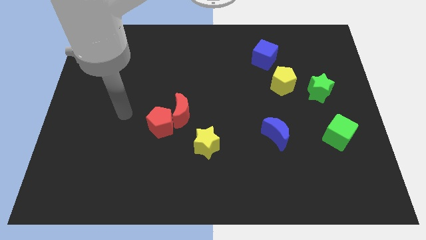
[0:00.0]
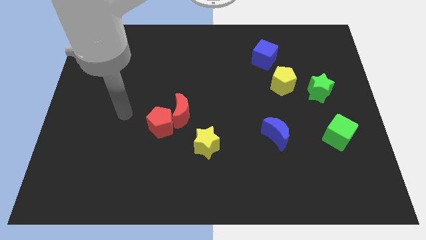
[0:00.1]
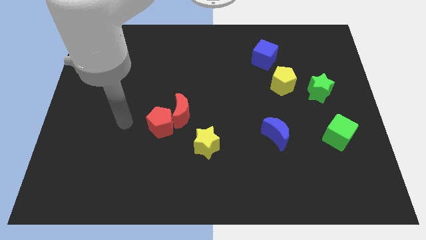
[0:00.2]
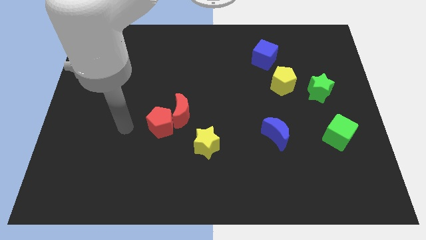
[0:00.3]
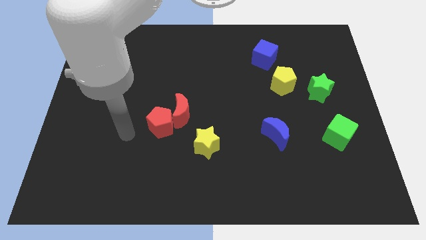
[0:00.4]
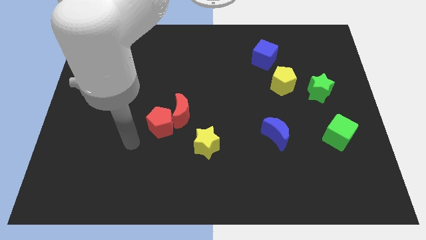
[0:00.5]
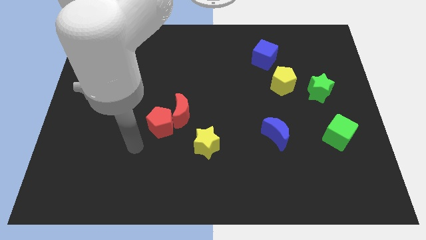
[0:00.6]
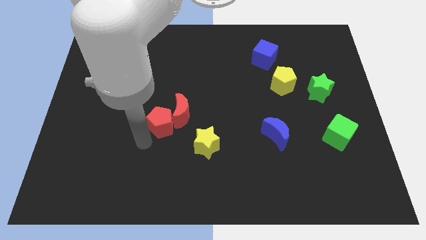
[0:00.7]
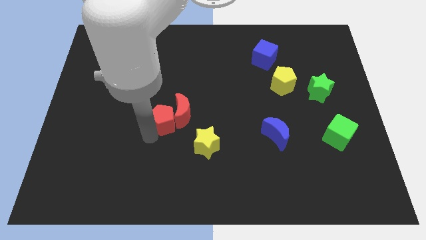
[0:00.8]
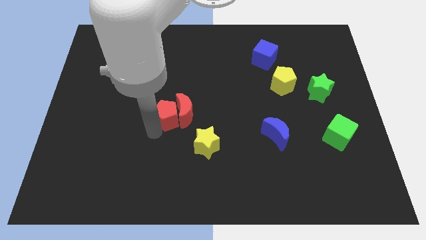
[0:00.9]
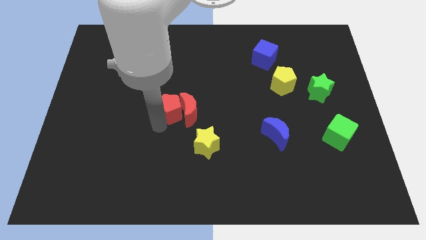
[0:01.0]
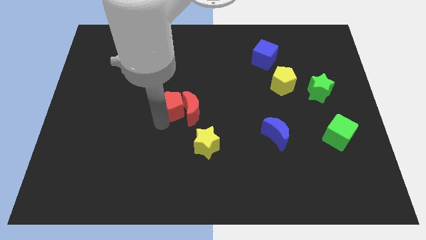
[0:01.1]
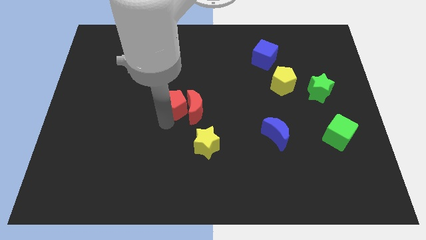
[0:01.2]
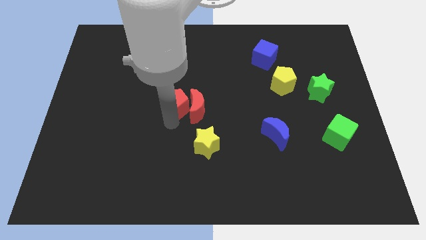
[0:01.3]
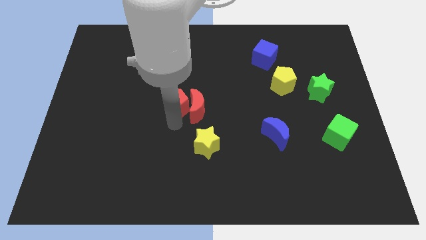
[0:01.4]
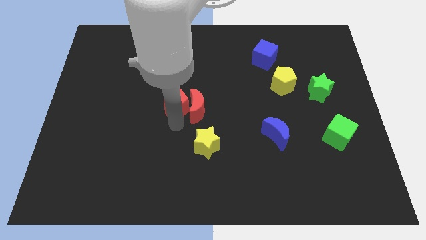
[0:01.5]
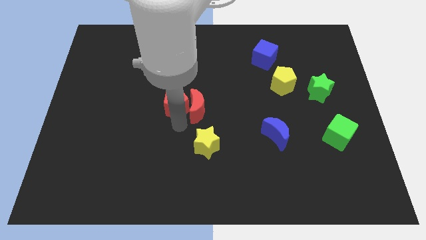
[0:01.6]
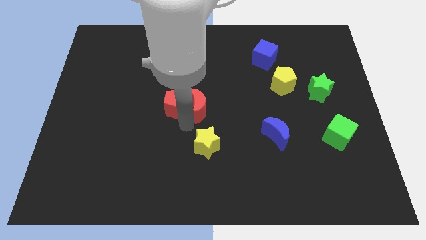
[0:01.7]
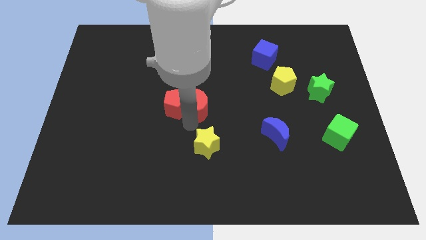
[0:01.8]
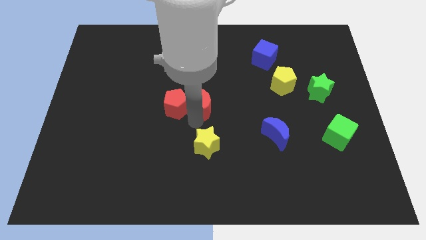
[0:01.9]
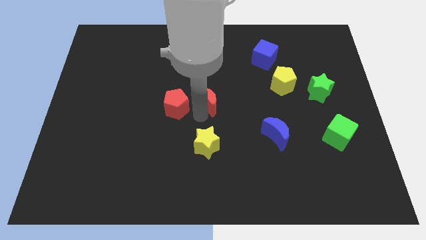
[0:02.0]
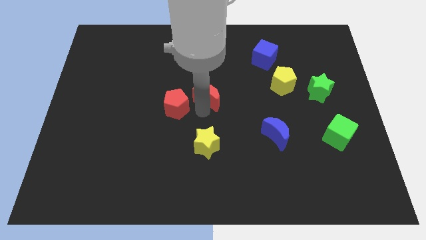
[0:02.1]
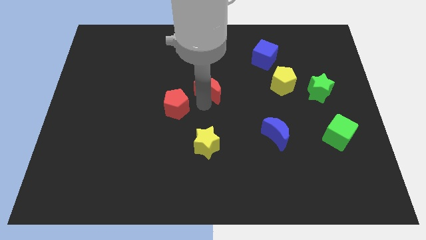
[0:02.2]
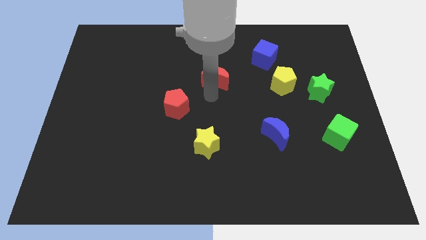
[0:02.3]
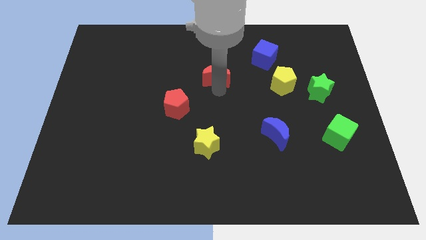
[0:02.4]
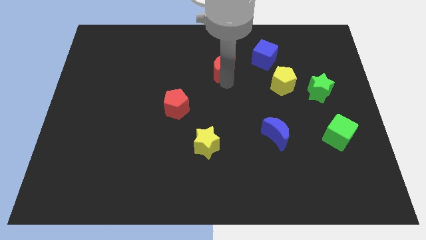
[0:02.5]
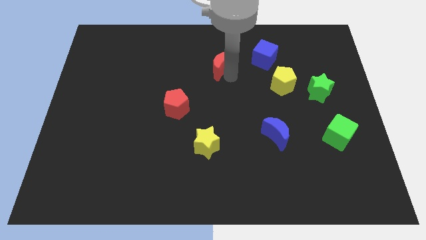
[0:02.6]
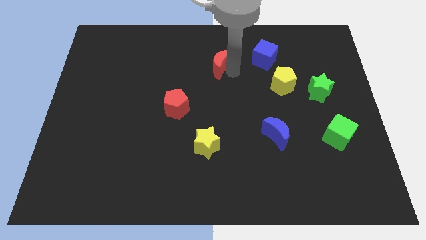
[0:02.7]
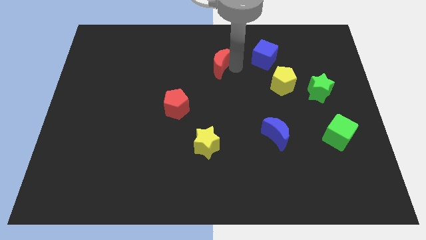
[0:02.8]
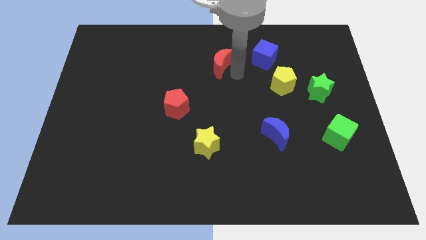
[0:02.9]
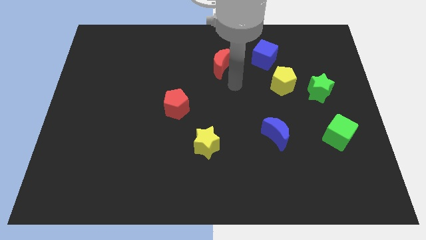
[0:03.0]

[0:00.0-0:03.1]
move the red moon away from the red pentagon

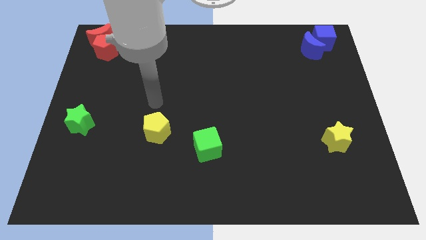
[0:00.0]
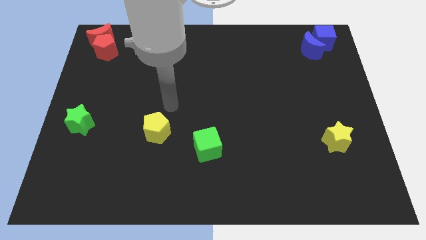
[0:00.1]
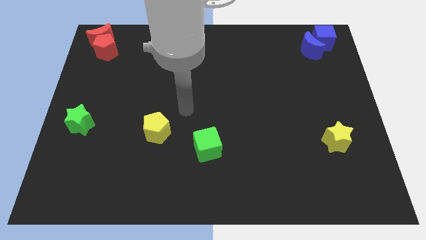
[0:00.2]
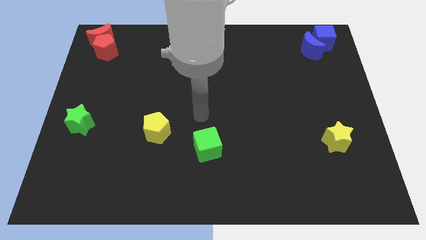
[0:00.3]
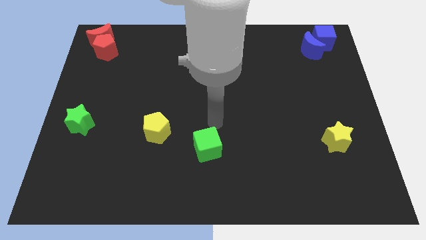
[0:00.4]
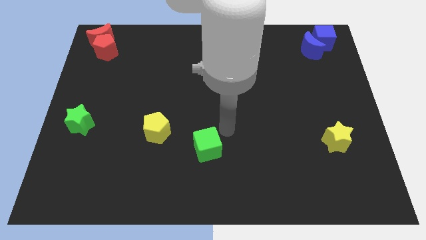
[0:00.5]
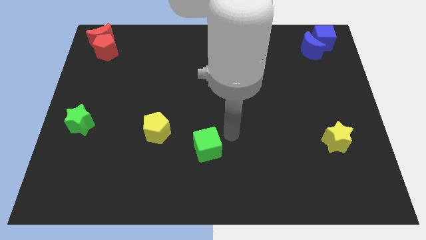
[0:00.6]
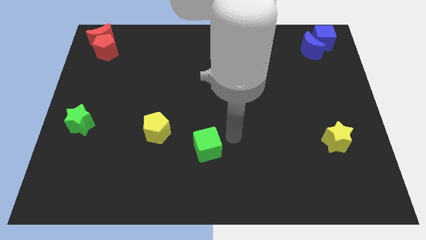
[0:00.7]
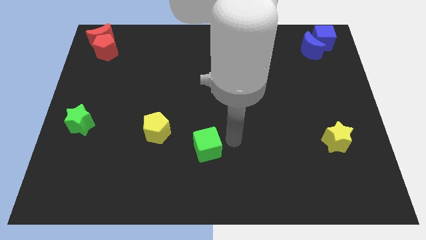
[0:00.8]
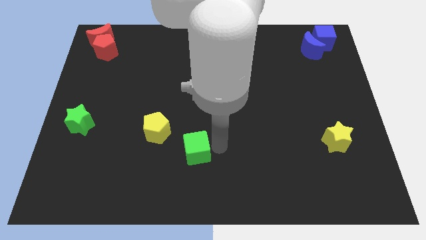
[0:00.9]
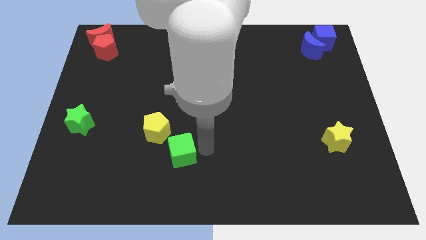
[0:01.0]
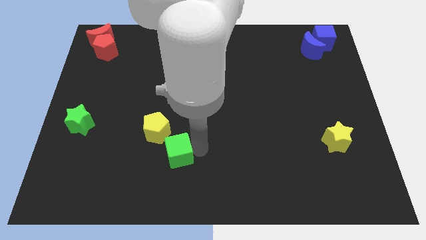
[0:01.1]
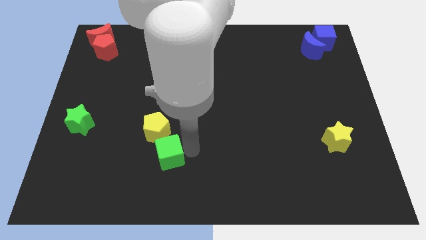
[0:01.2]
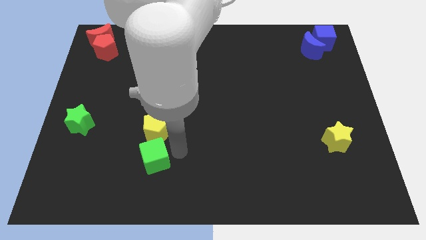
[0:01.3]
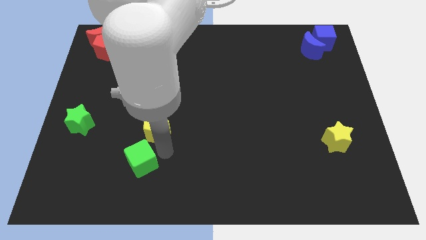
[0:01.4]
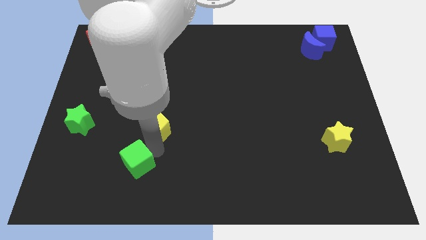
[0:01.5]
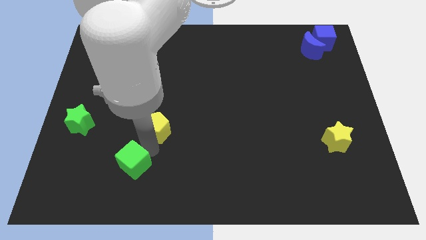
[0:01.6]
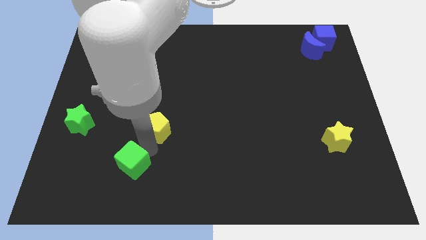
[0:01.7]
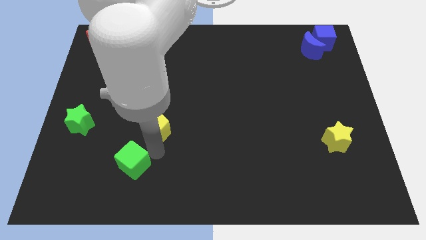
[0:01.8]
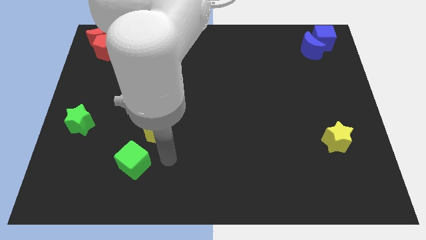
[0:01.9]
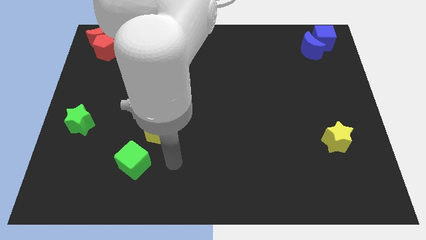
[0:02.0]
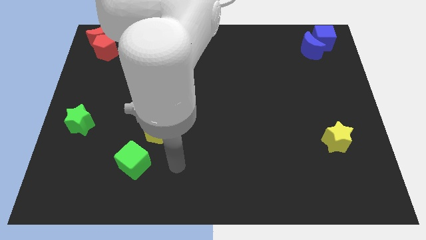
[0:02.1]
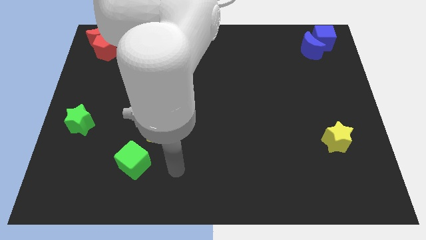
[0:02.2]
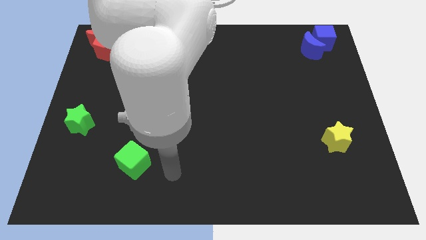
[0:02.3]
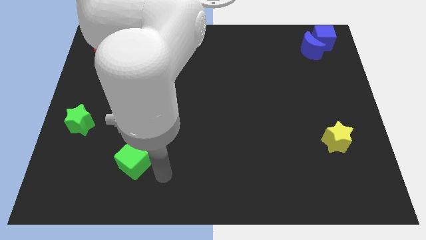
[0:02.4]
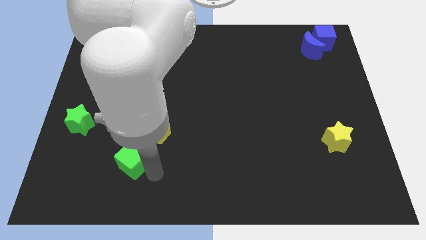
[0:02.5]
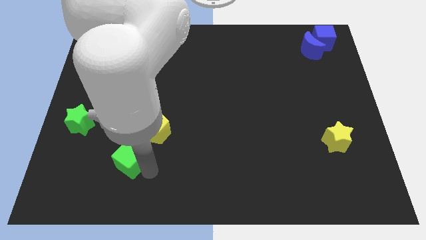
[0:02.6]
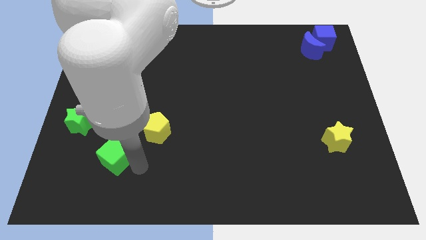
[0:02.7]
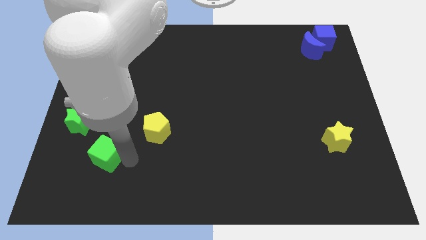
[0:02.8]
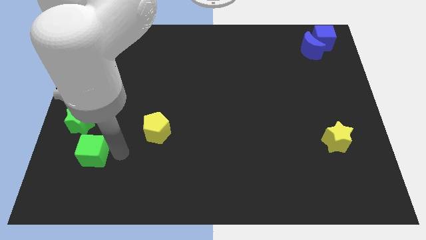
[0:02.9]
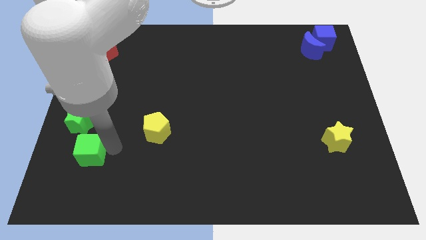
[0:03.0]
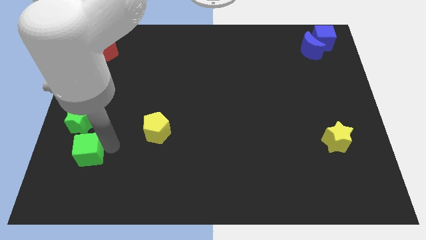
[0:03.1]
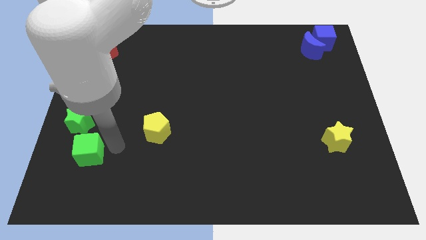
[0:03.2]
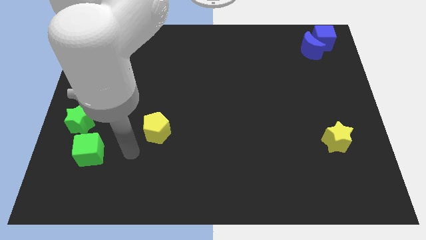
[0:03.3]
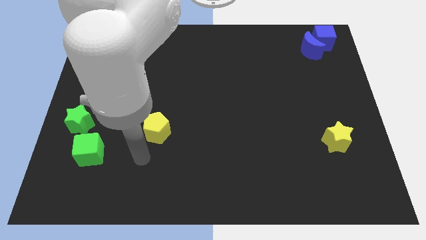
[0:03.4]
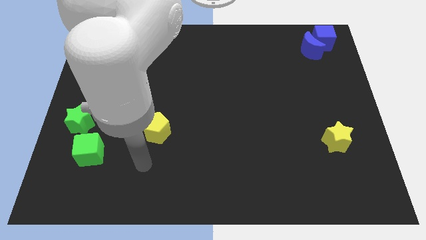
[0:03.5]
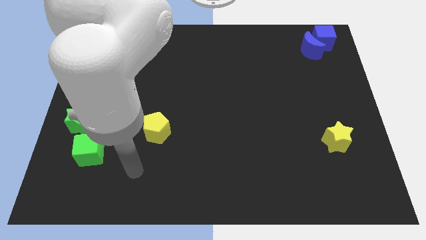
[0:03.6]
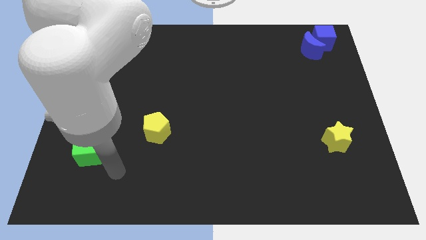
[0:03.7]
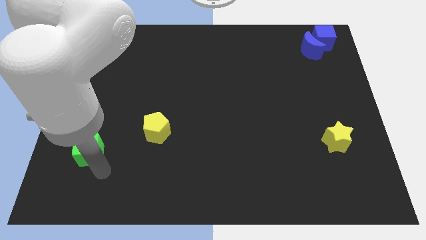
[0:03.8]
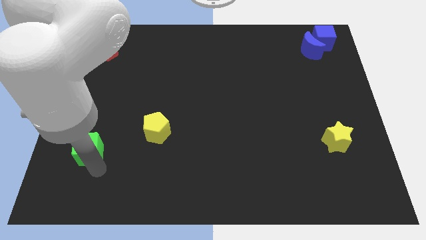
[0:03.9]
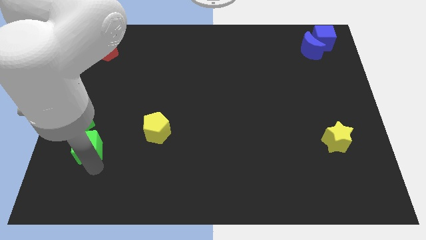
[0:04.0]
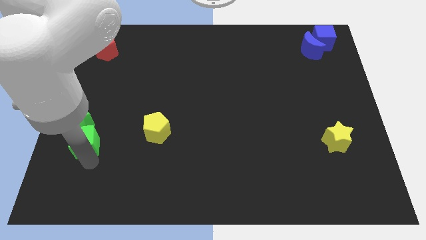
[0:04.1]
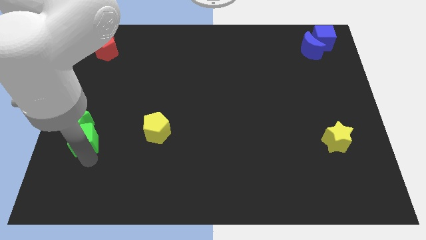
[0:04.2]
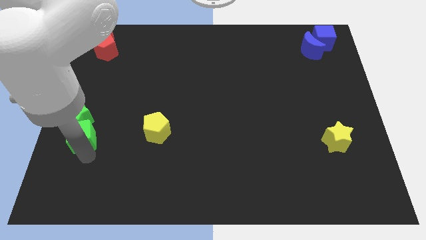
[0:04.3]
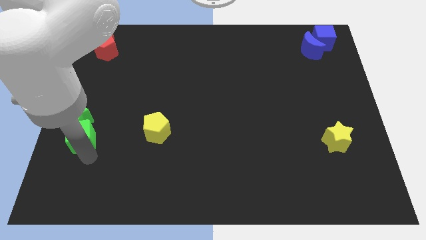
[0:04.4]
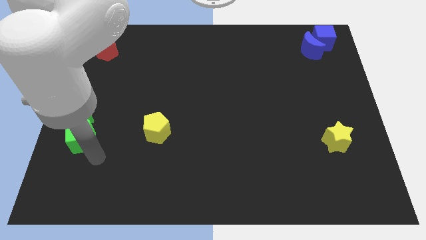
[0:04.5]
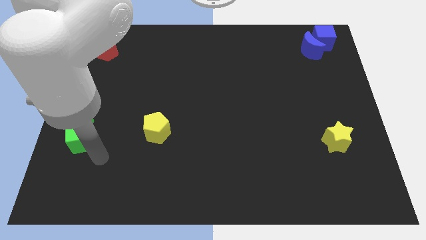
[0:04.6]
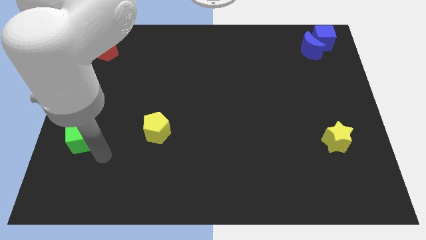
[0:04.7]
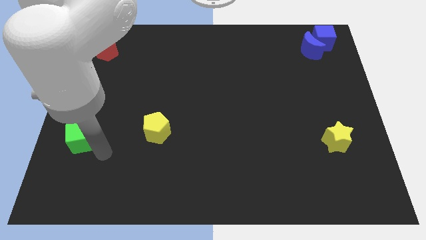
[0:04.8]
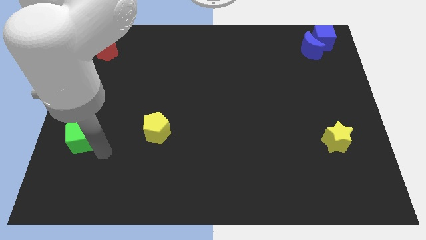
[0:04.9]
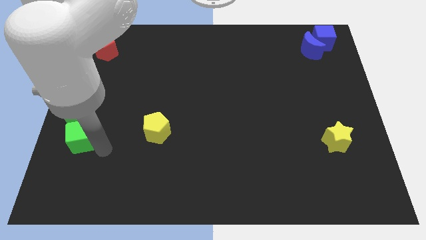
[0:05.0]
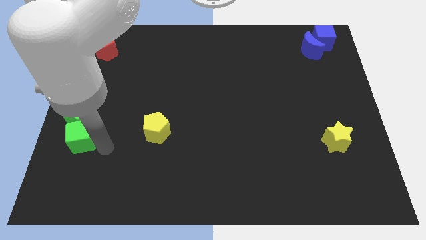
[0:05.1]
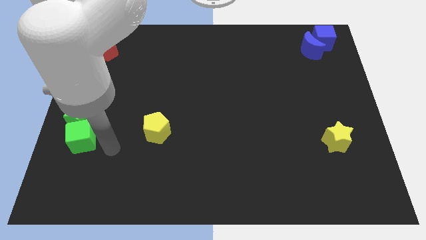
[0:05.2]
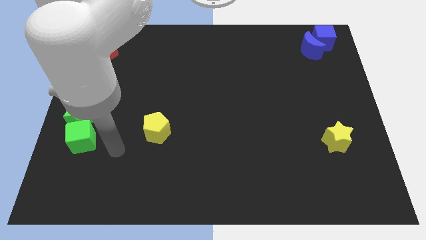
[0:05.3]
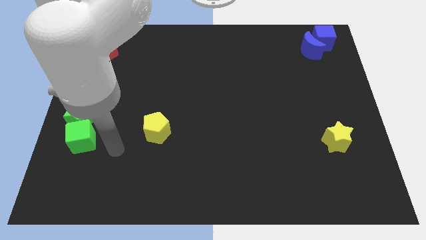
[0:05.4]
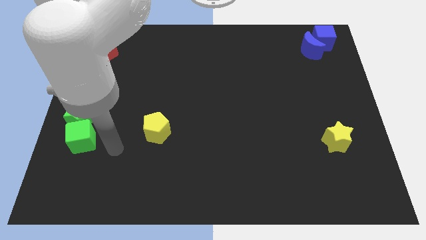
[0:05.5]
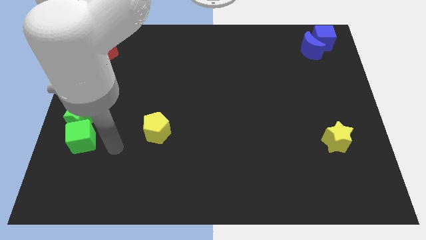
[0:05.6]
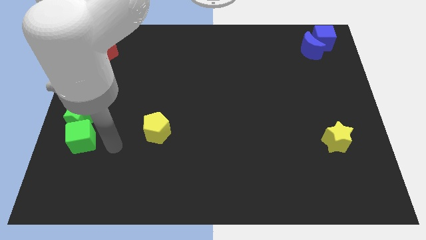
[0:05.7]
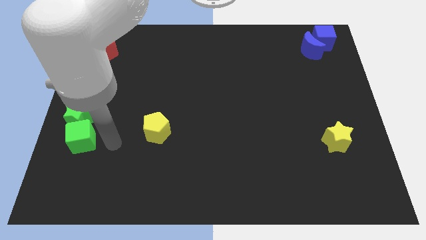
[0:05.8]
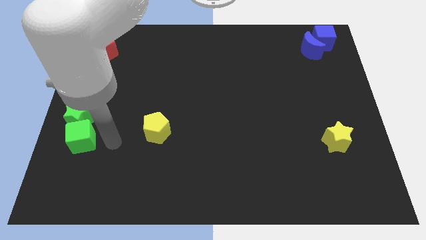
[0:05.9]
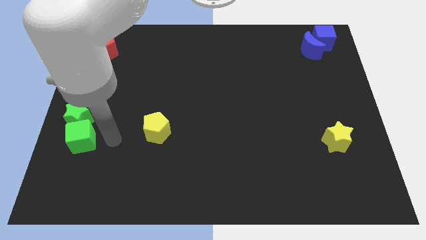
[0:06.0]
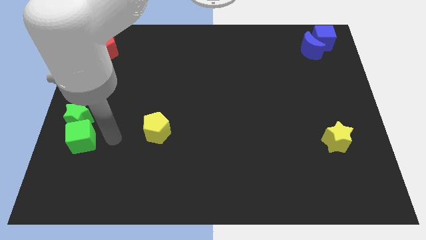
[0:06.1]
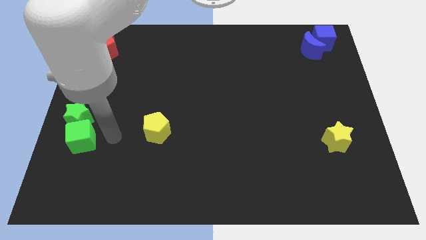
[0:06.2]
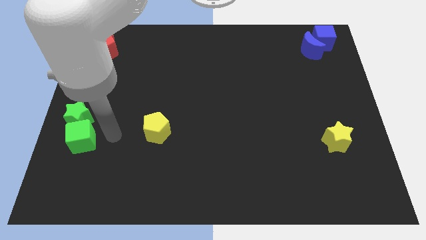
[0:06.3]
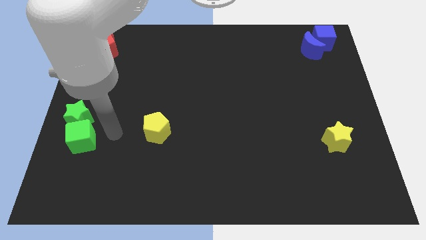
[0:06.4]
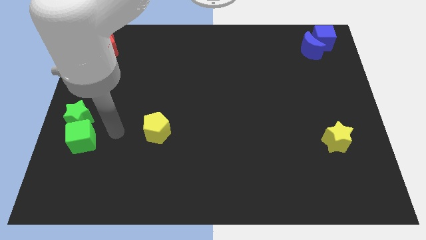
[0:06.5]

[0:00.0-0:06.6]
move the green cube into the green star
